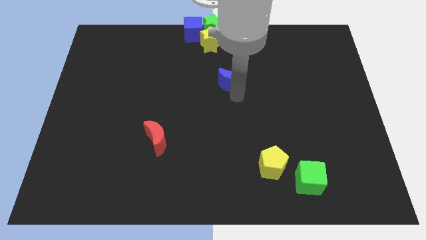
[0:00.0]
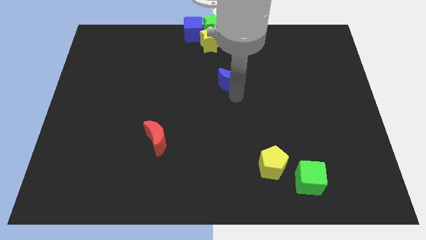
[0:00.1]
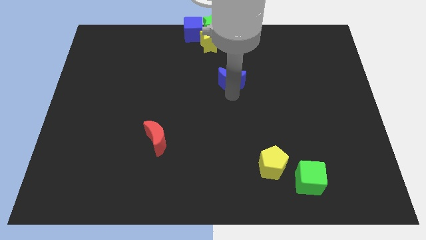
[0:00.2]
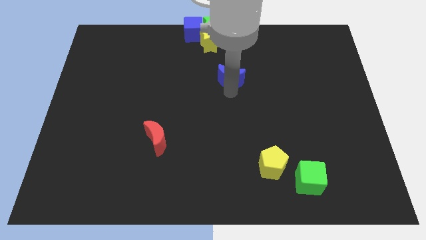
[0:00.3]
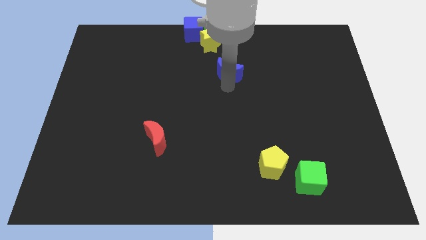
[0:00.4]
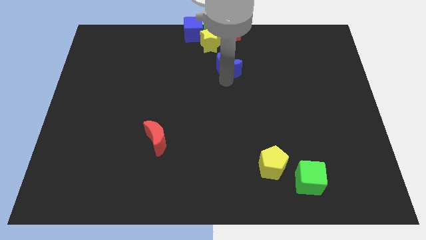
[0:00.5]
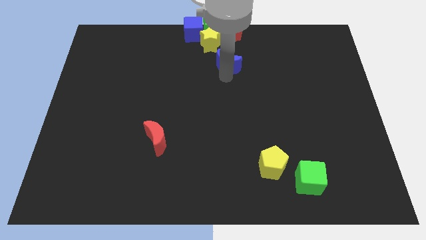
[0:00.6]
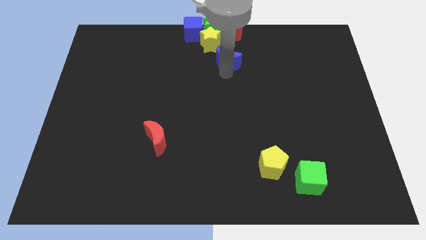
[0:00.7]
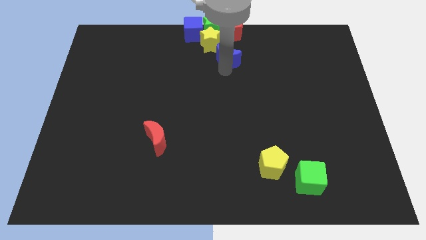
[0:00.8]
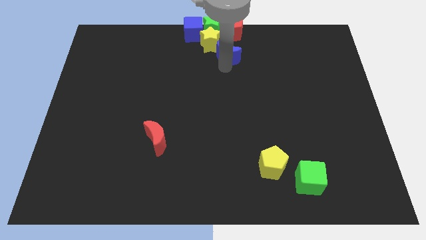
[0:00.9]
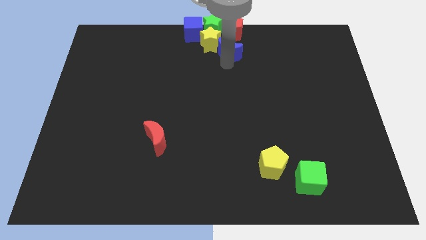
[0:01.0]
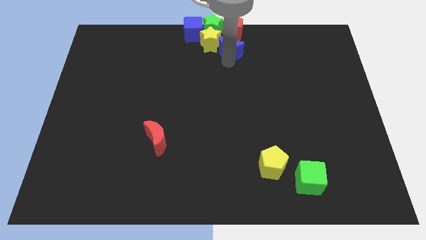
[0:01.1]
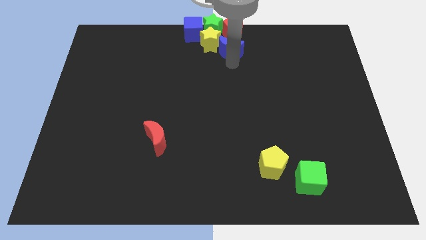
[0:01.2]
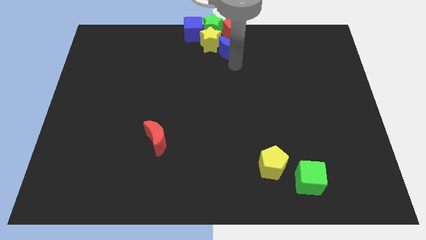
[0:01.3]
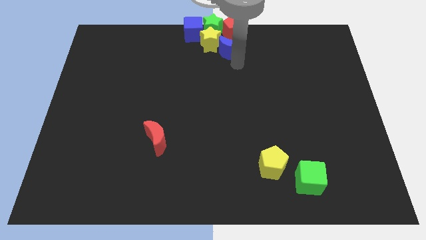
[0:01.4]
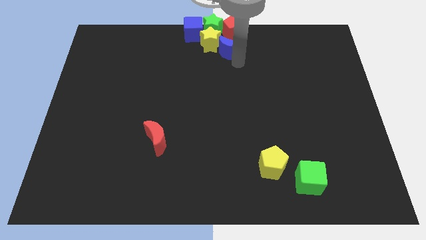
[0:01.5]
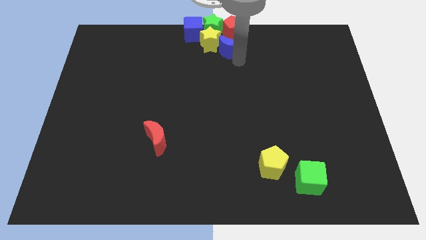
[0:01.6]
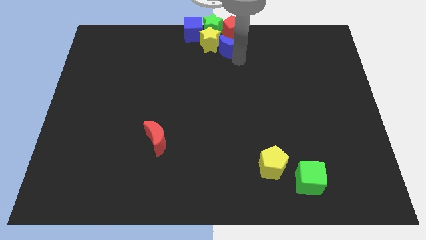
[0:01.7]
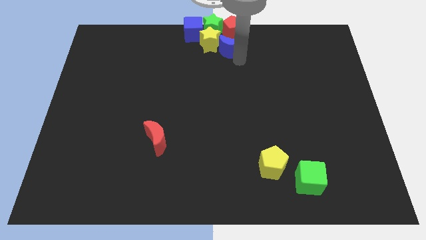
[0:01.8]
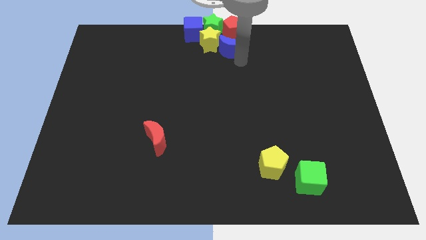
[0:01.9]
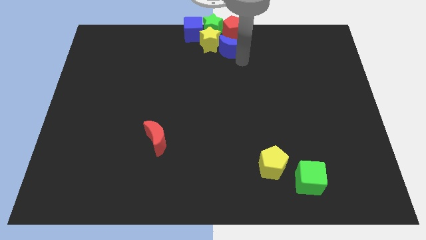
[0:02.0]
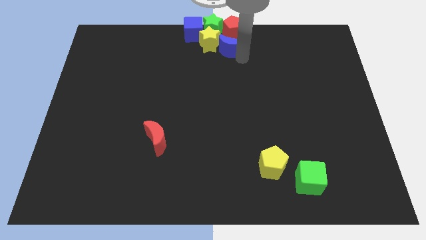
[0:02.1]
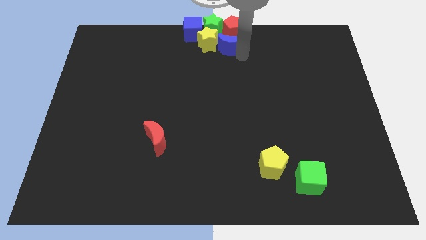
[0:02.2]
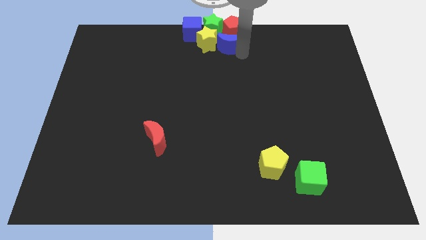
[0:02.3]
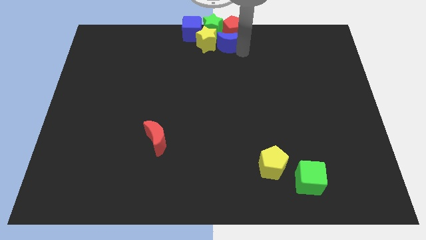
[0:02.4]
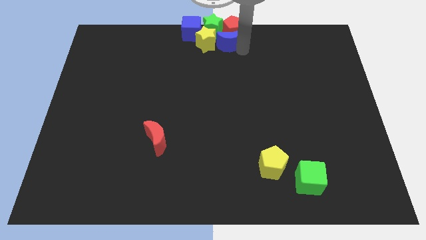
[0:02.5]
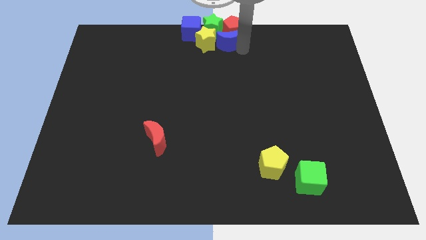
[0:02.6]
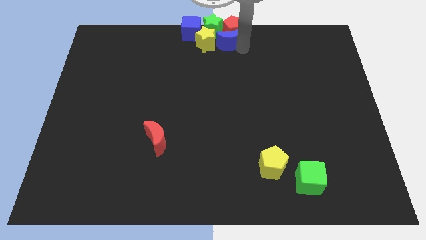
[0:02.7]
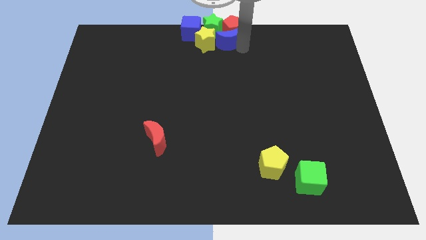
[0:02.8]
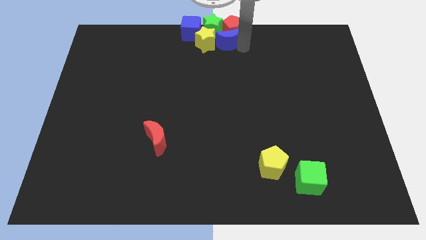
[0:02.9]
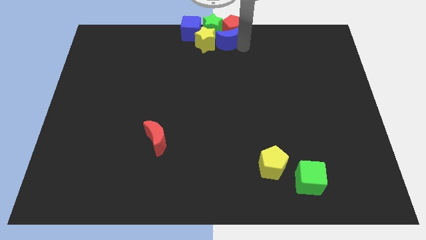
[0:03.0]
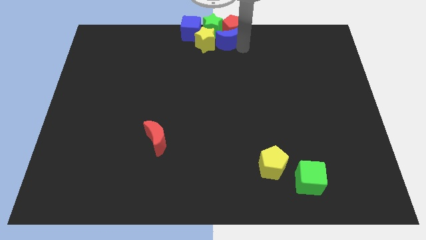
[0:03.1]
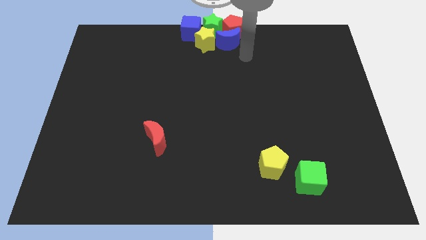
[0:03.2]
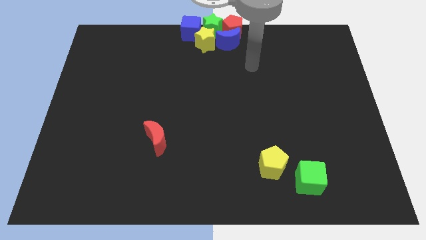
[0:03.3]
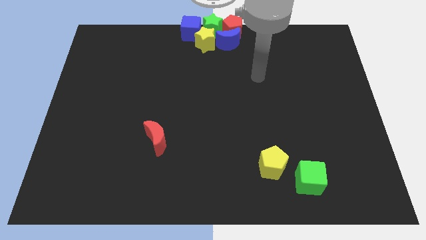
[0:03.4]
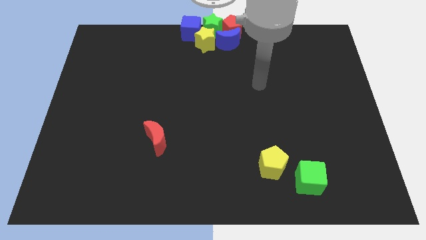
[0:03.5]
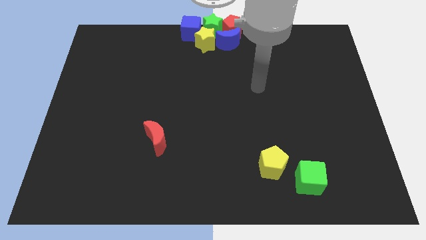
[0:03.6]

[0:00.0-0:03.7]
place blue crescent to right of yellow star

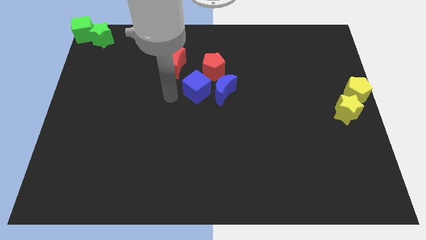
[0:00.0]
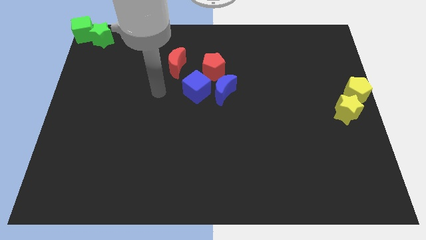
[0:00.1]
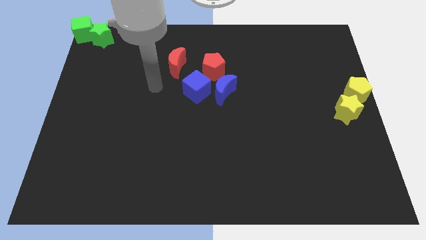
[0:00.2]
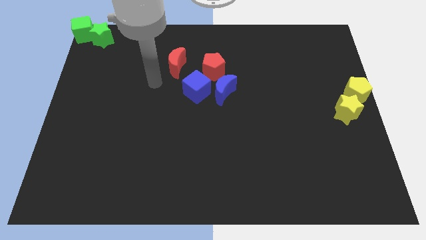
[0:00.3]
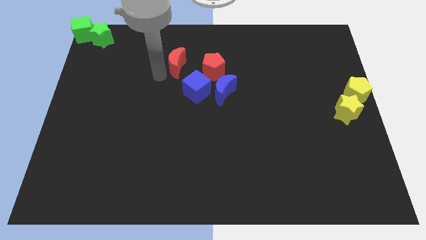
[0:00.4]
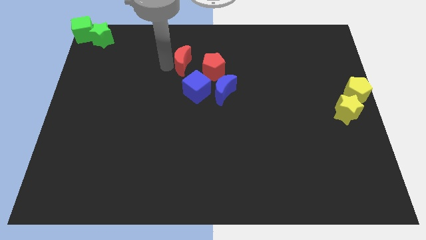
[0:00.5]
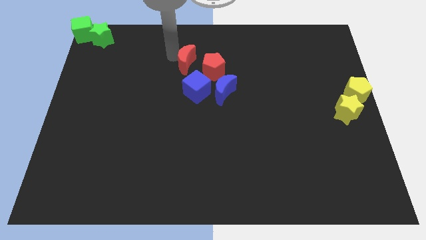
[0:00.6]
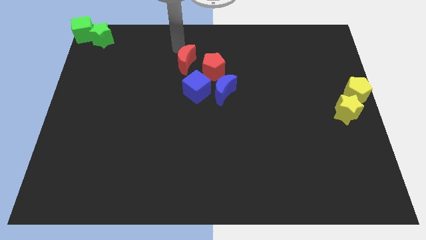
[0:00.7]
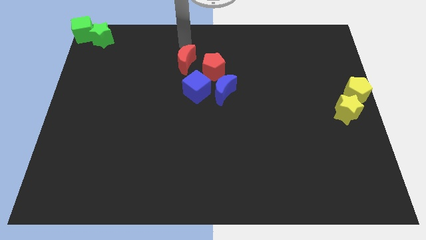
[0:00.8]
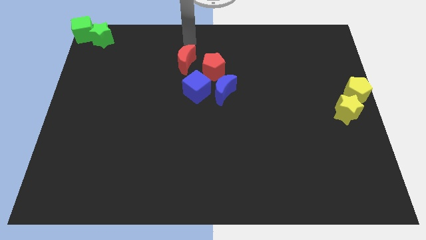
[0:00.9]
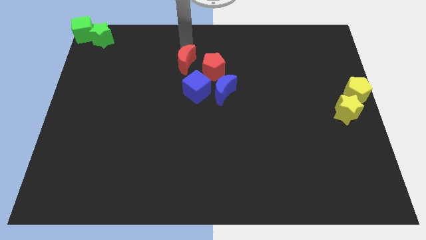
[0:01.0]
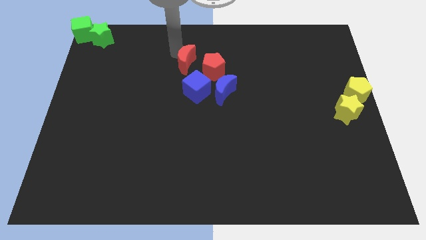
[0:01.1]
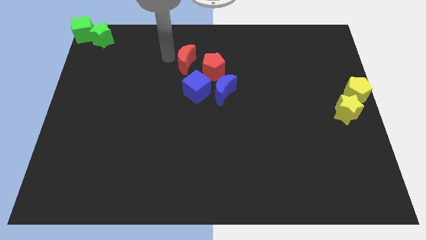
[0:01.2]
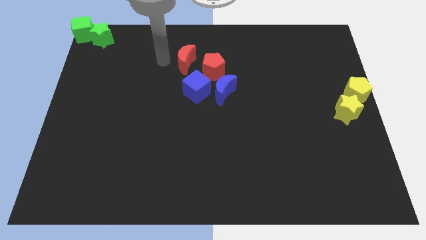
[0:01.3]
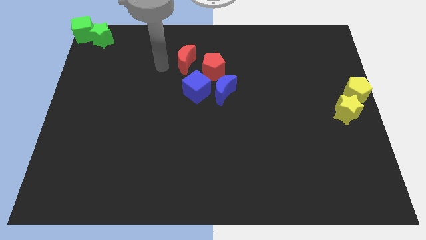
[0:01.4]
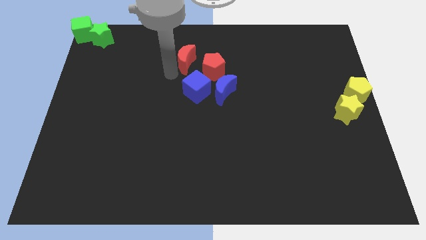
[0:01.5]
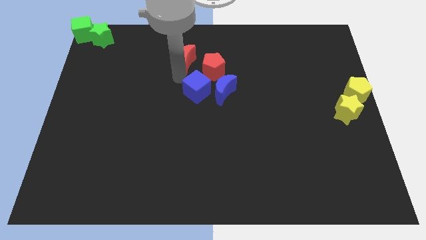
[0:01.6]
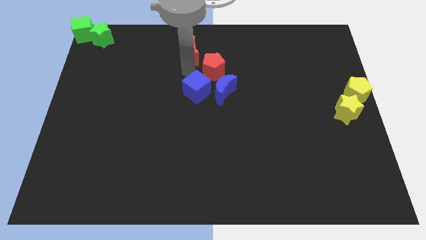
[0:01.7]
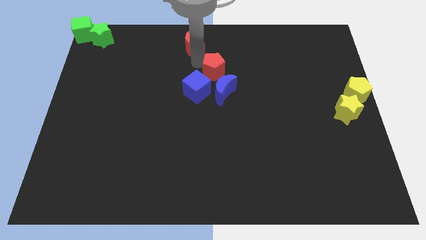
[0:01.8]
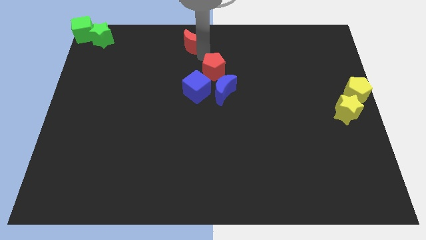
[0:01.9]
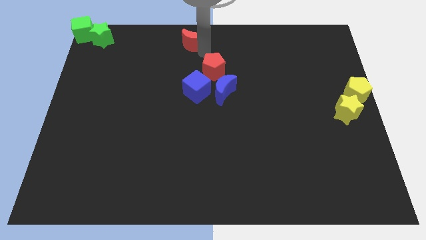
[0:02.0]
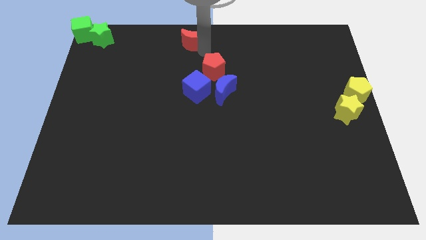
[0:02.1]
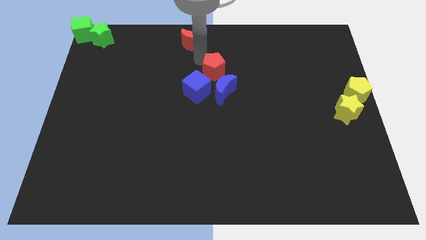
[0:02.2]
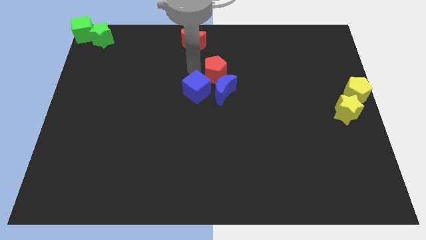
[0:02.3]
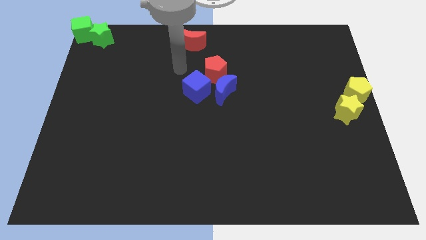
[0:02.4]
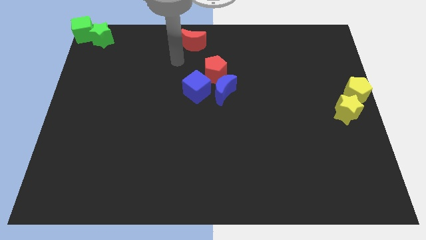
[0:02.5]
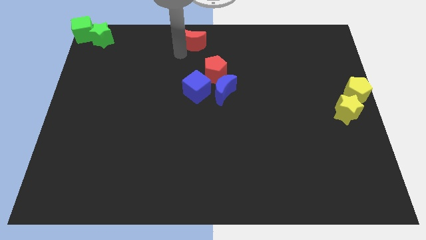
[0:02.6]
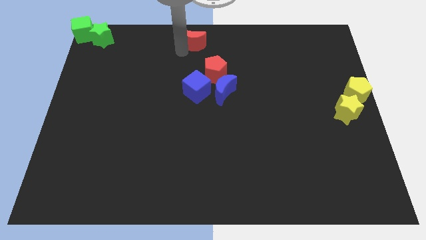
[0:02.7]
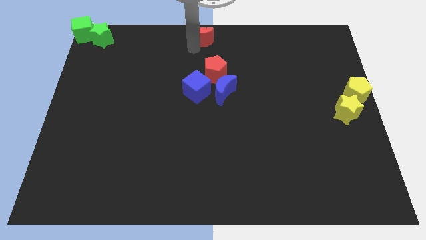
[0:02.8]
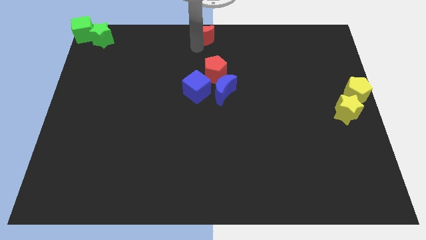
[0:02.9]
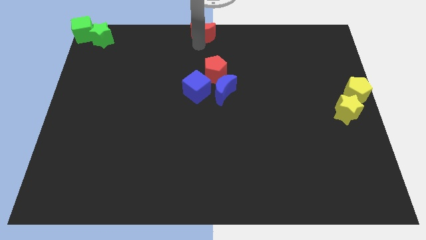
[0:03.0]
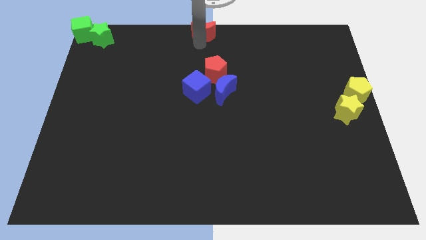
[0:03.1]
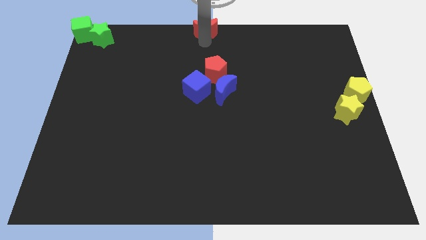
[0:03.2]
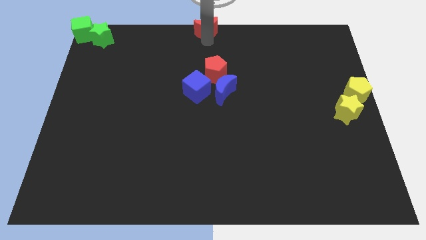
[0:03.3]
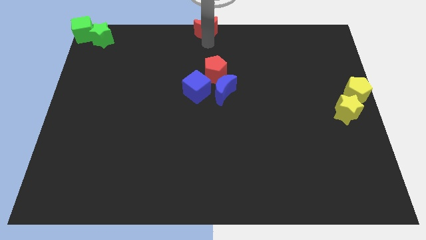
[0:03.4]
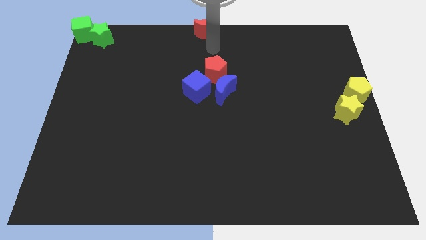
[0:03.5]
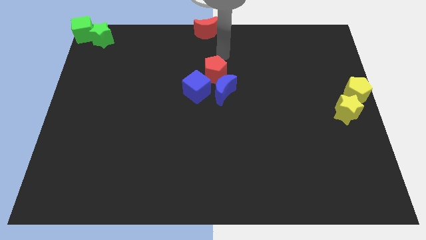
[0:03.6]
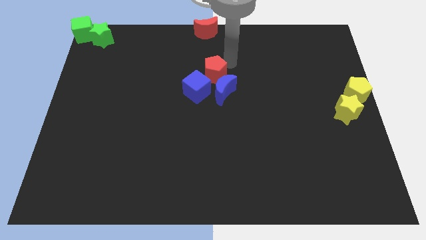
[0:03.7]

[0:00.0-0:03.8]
move the red crescent vertically to the top side of the red pentagon

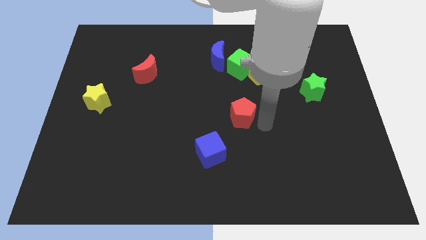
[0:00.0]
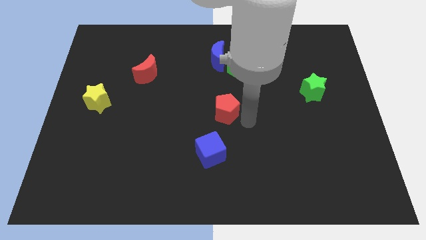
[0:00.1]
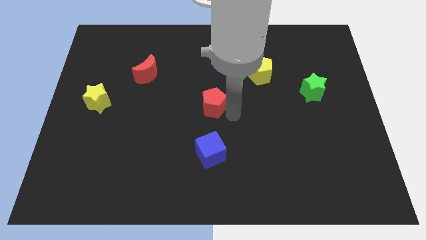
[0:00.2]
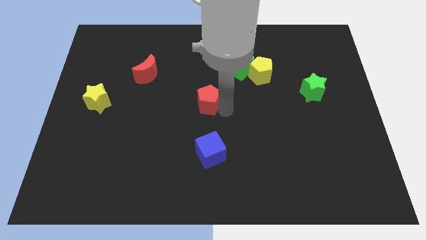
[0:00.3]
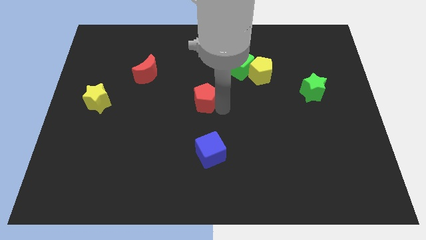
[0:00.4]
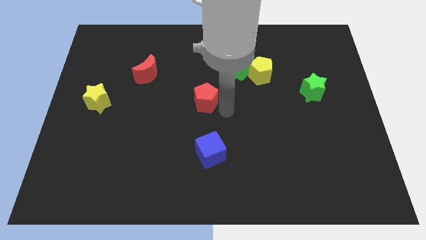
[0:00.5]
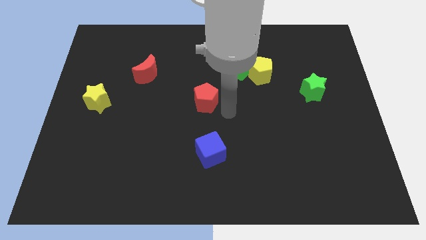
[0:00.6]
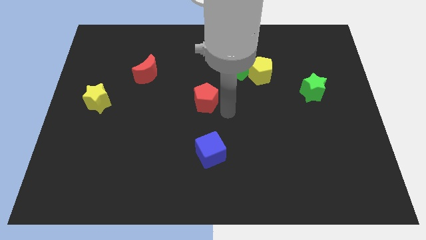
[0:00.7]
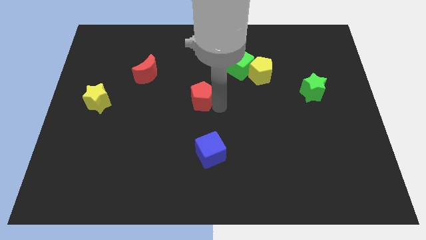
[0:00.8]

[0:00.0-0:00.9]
push the red pentagon in the center

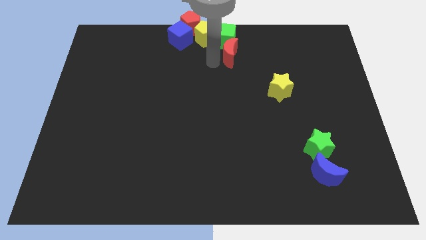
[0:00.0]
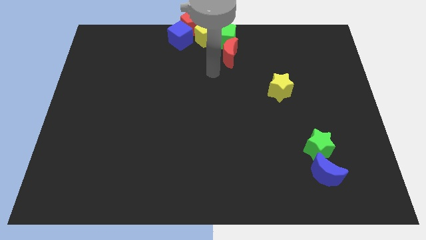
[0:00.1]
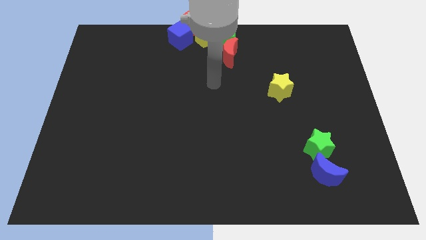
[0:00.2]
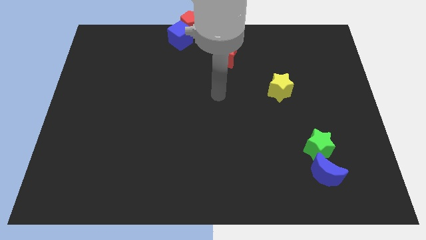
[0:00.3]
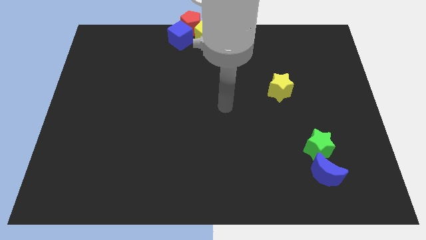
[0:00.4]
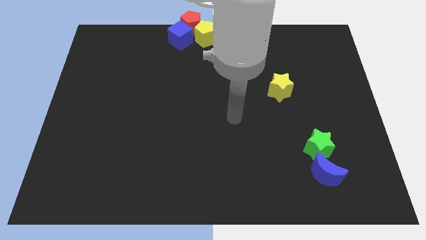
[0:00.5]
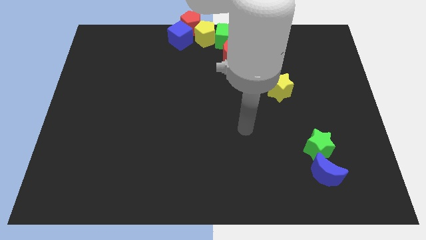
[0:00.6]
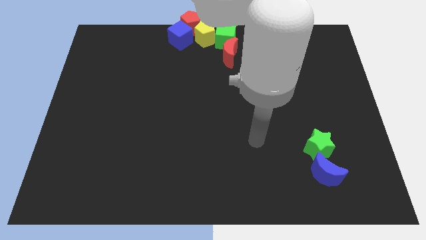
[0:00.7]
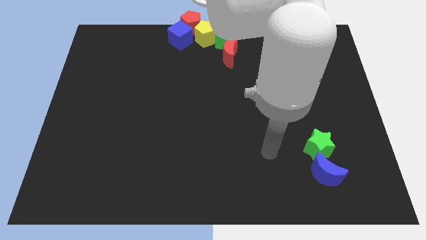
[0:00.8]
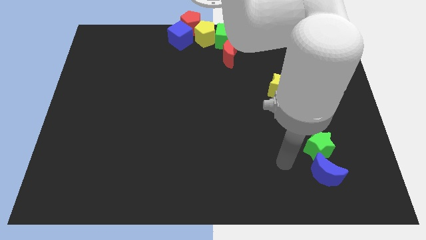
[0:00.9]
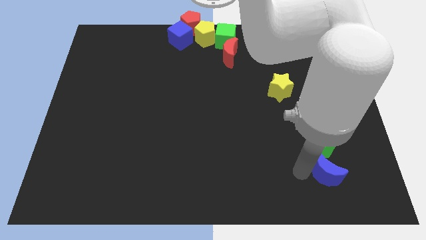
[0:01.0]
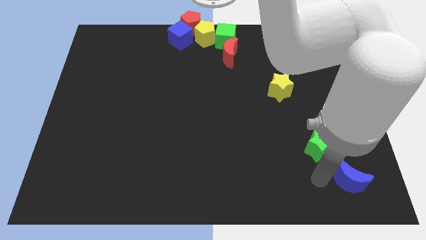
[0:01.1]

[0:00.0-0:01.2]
move your arm towards the blue moon
